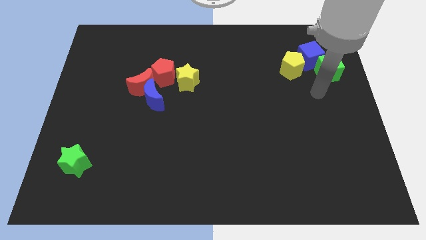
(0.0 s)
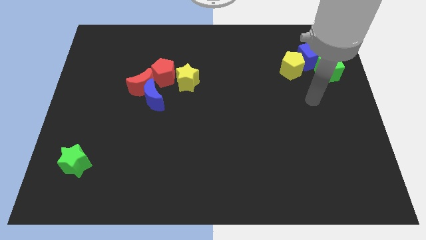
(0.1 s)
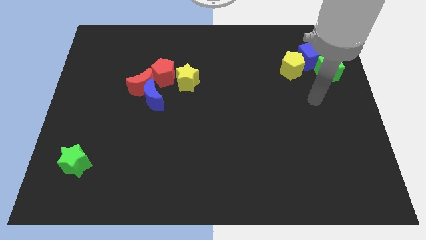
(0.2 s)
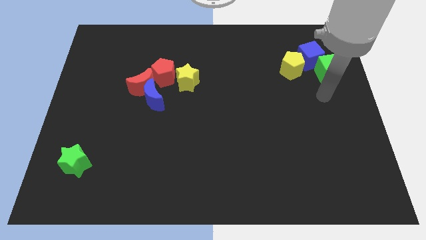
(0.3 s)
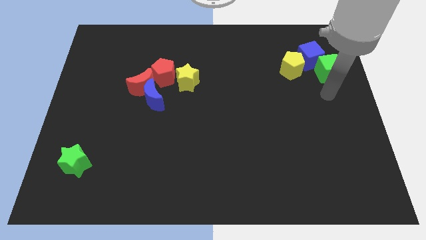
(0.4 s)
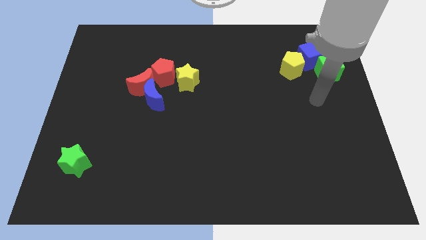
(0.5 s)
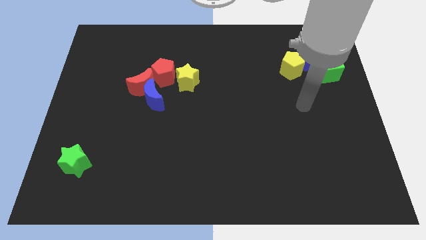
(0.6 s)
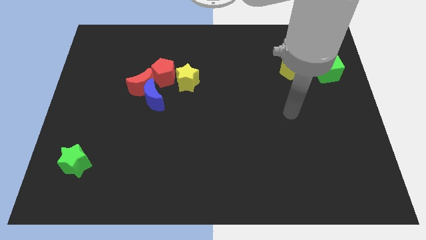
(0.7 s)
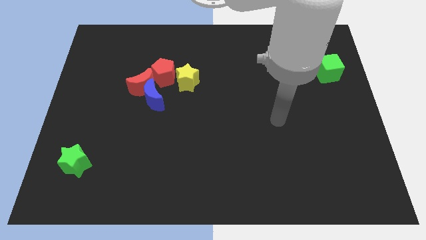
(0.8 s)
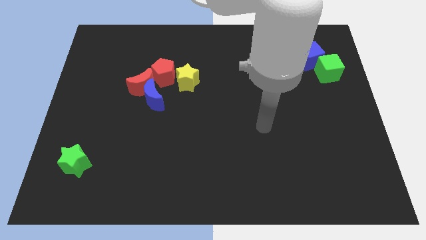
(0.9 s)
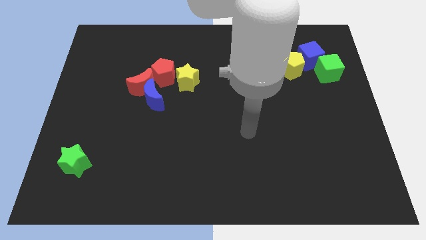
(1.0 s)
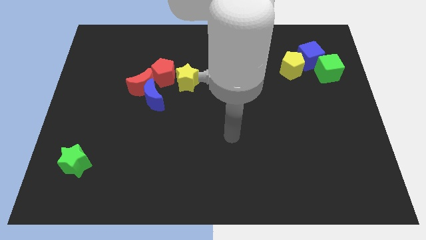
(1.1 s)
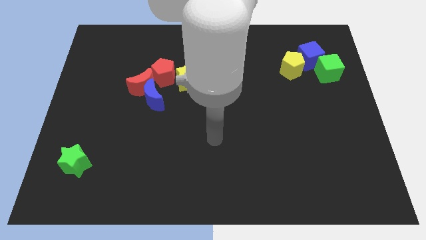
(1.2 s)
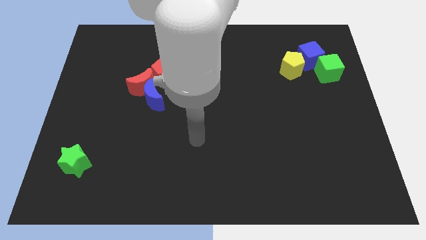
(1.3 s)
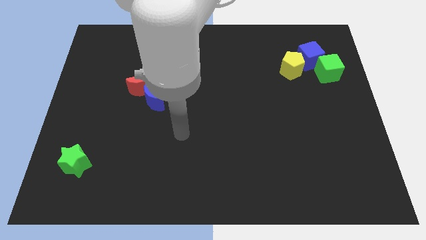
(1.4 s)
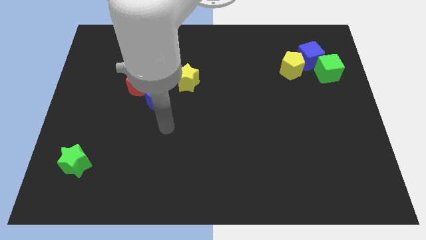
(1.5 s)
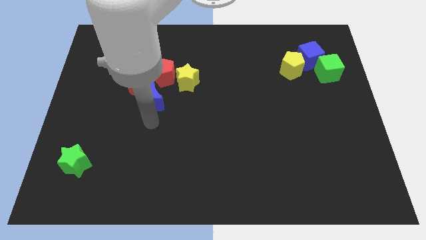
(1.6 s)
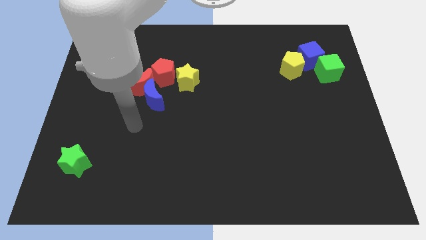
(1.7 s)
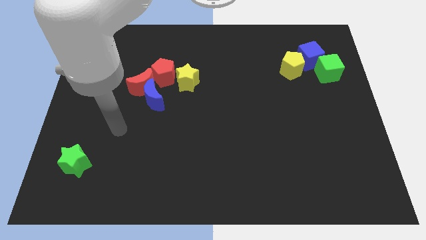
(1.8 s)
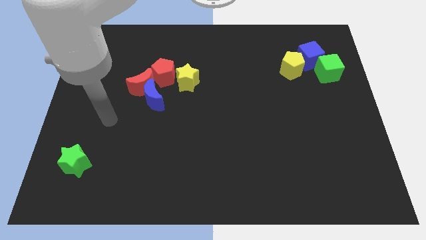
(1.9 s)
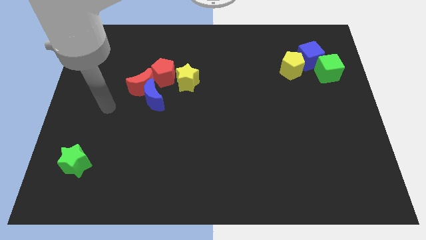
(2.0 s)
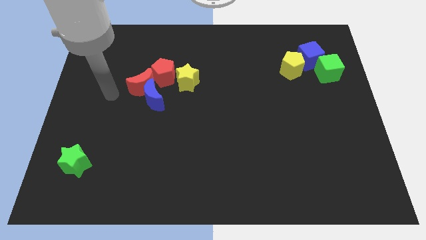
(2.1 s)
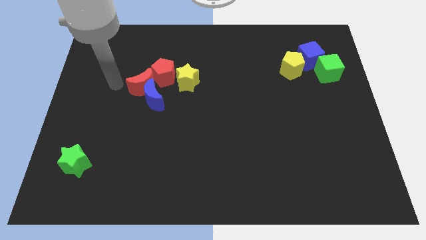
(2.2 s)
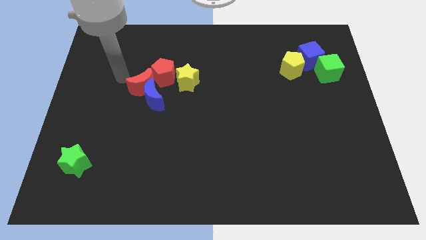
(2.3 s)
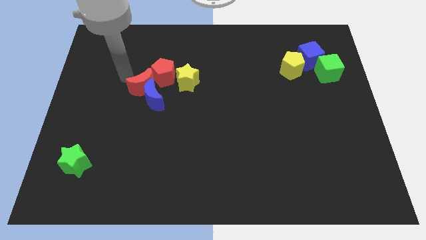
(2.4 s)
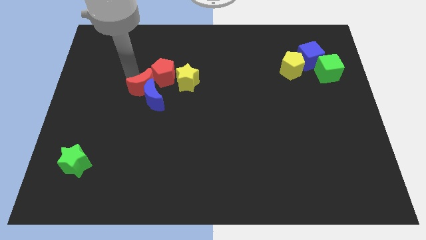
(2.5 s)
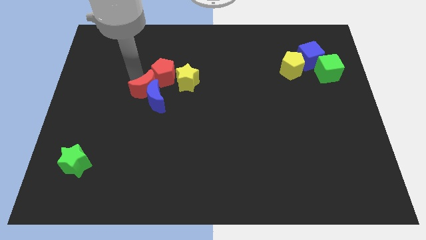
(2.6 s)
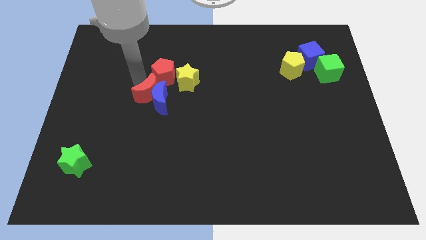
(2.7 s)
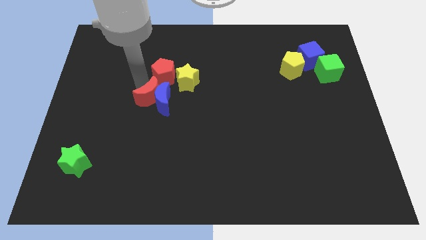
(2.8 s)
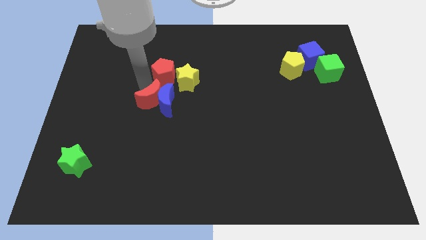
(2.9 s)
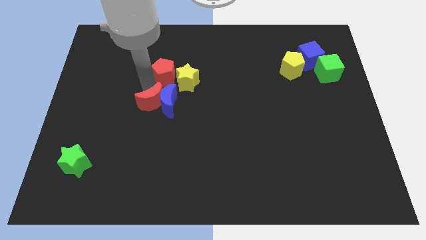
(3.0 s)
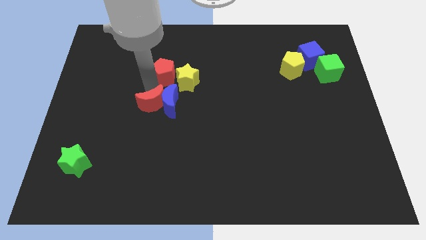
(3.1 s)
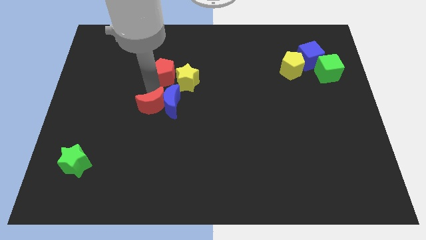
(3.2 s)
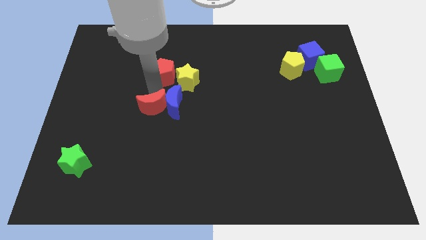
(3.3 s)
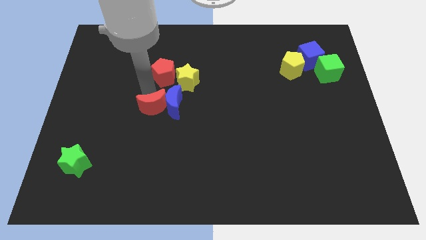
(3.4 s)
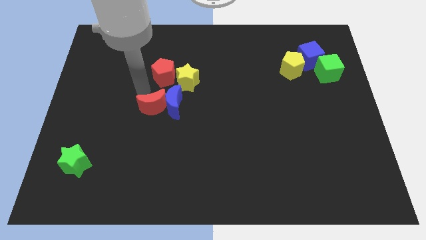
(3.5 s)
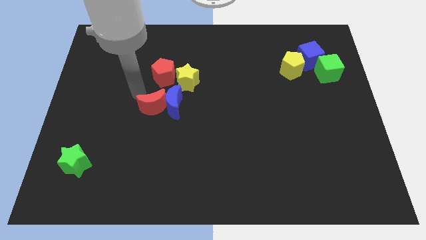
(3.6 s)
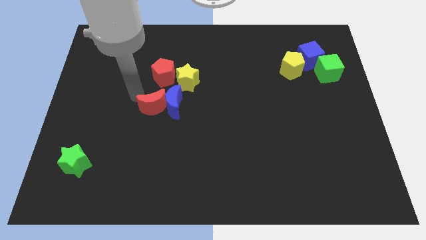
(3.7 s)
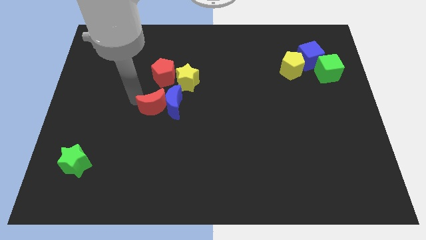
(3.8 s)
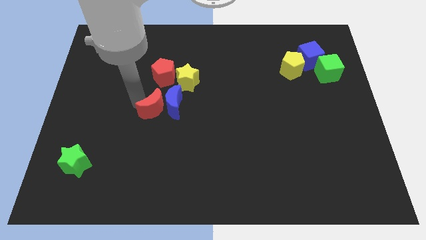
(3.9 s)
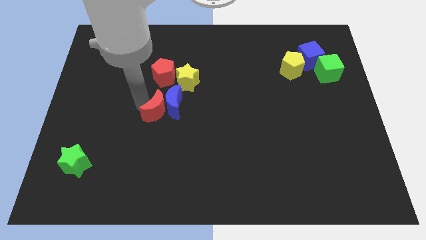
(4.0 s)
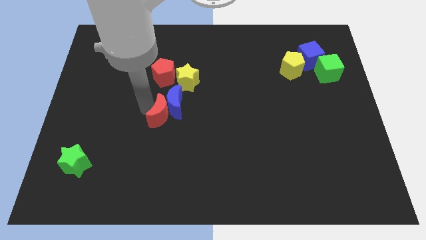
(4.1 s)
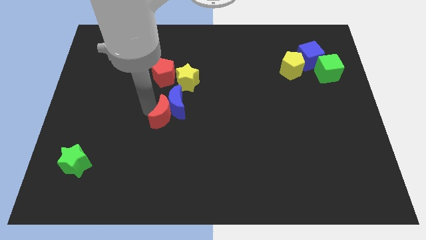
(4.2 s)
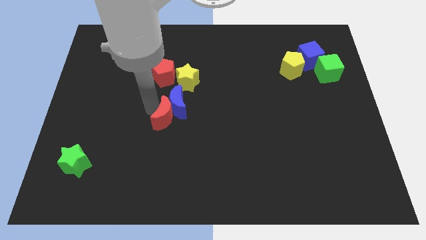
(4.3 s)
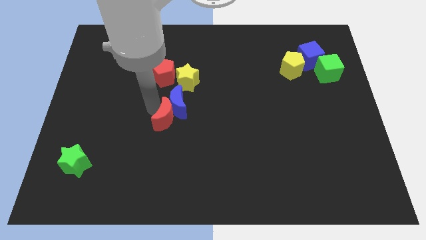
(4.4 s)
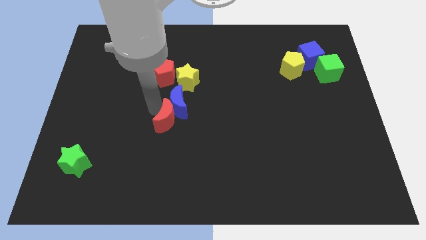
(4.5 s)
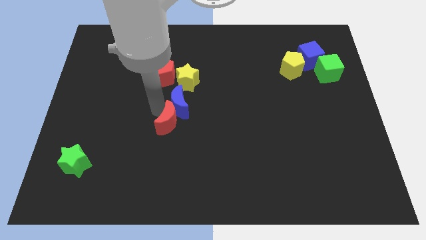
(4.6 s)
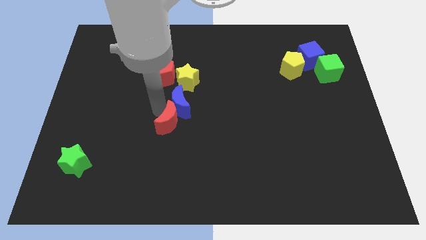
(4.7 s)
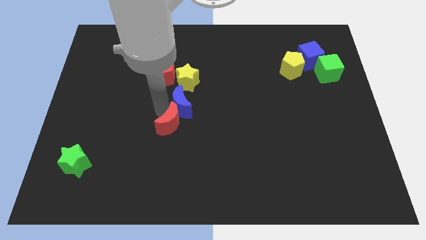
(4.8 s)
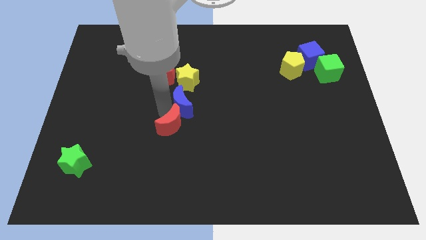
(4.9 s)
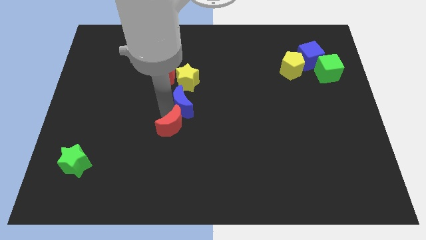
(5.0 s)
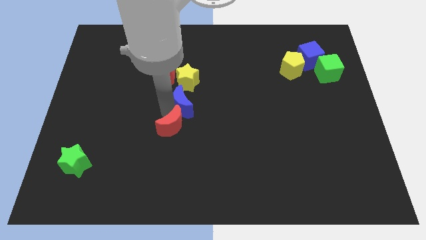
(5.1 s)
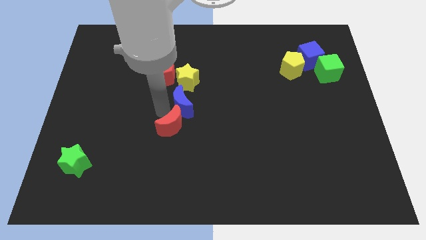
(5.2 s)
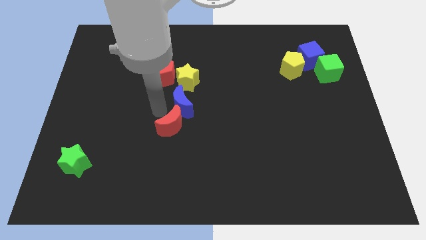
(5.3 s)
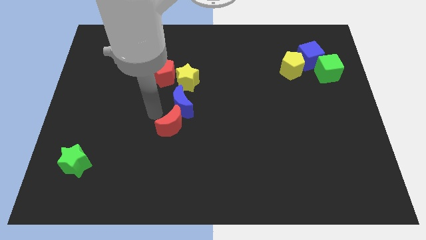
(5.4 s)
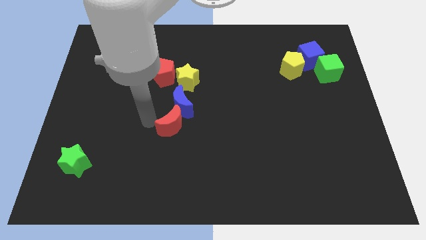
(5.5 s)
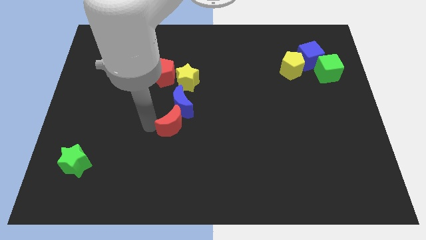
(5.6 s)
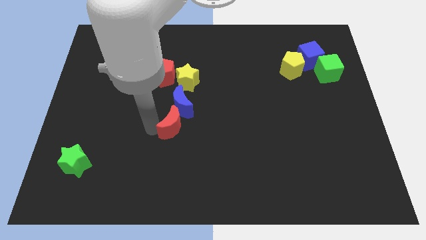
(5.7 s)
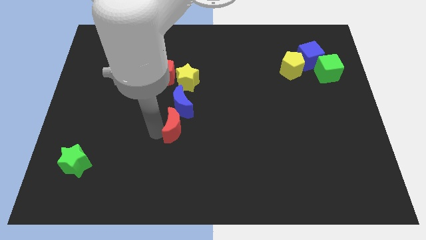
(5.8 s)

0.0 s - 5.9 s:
move the red crescent away from the red pentagon

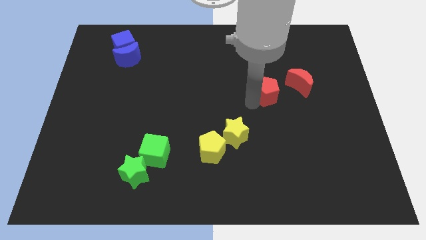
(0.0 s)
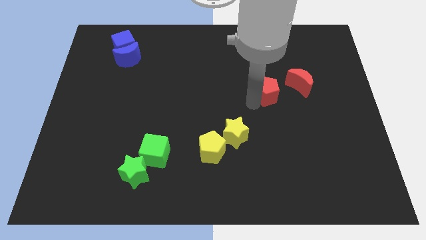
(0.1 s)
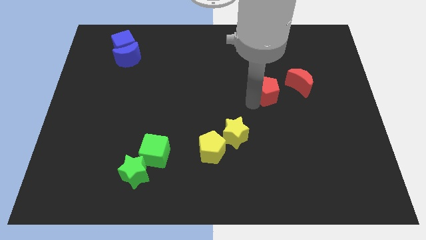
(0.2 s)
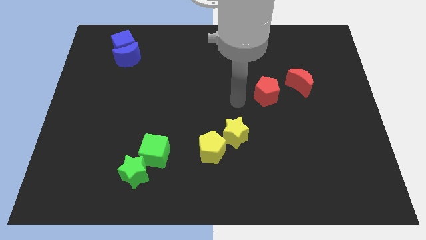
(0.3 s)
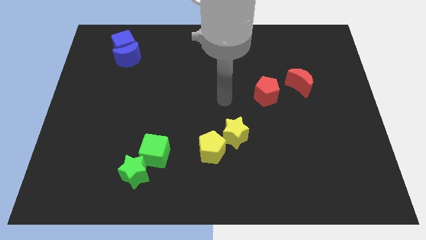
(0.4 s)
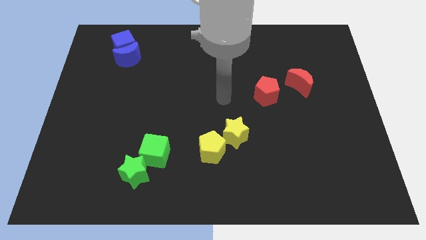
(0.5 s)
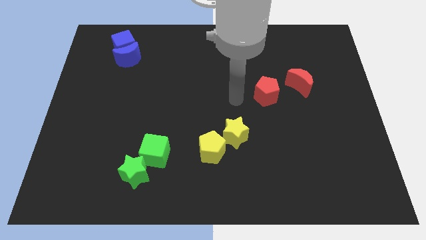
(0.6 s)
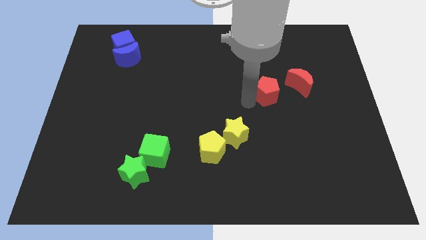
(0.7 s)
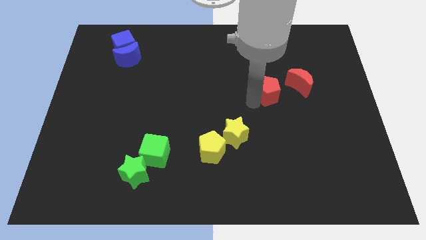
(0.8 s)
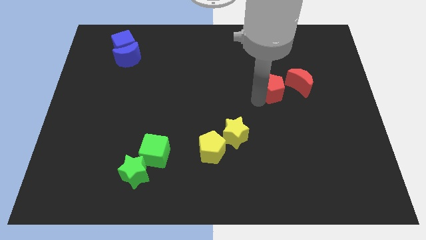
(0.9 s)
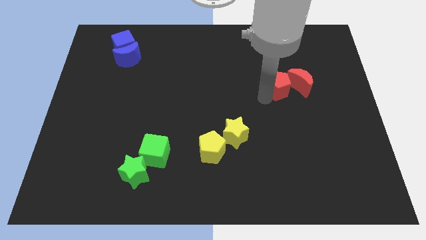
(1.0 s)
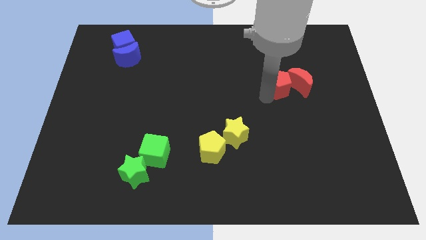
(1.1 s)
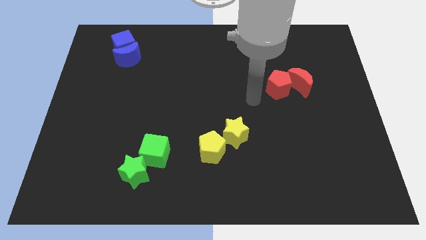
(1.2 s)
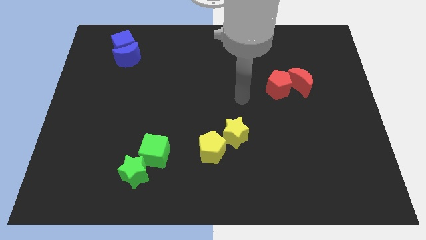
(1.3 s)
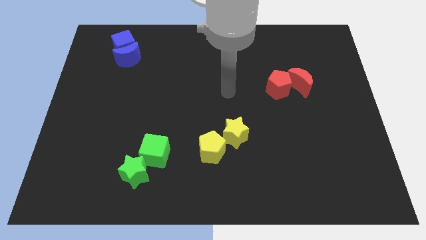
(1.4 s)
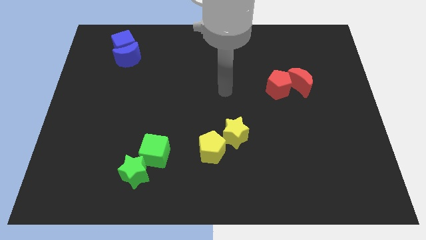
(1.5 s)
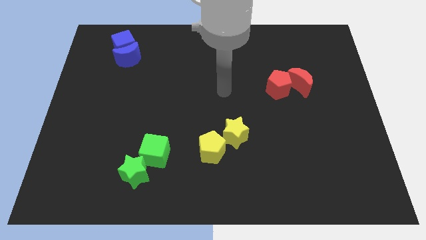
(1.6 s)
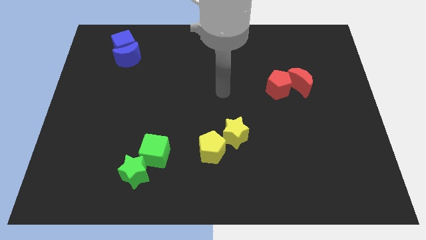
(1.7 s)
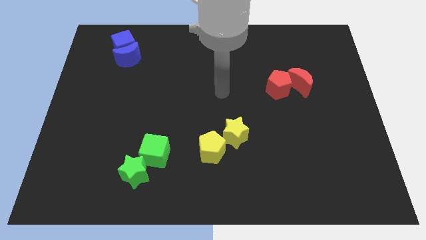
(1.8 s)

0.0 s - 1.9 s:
push the red pentagon close to the red crescent

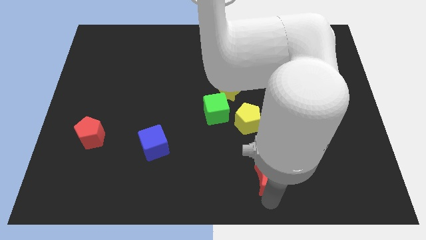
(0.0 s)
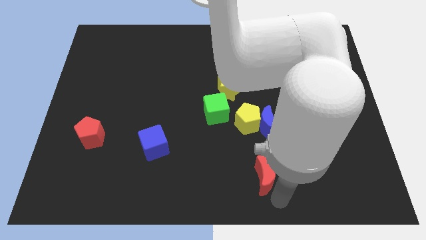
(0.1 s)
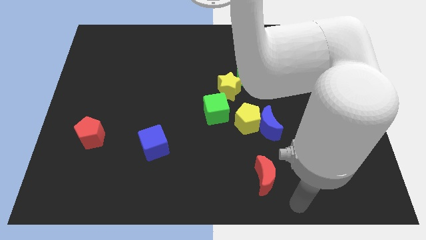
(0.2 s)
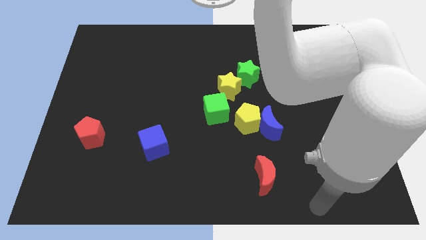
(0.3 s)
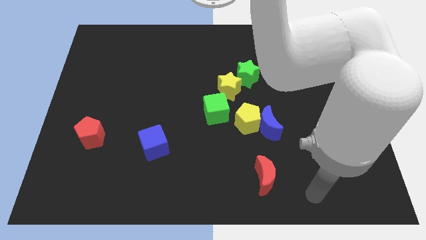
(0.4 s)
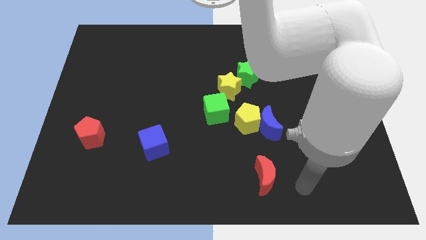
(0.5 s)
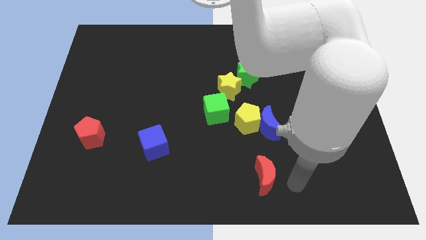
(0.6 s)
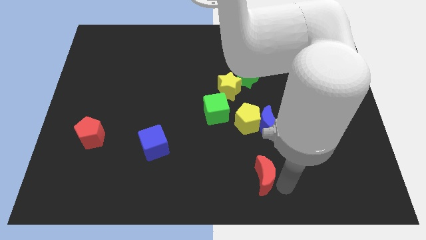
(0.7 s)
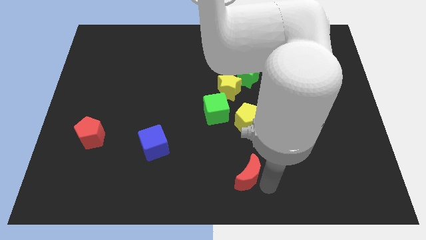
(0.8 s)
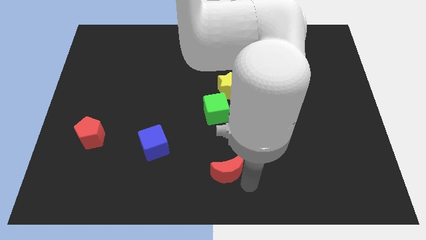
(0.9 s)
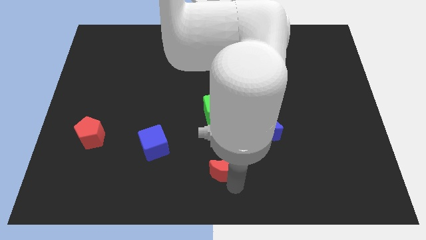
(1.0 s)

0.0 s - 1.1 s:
place the red moon below the yellow pentagon
